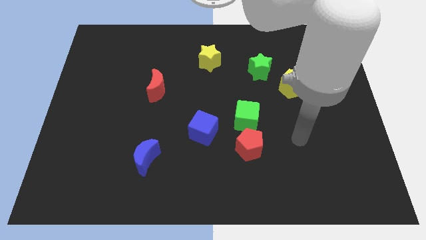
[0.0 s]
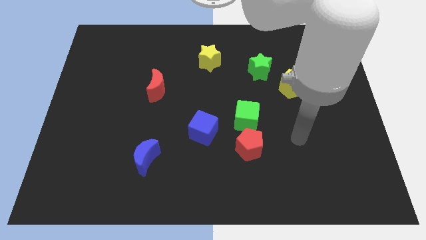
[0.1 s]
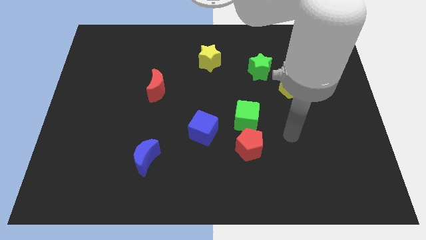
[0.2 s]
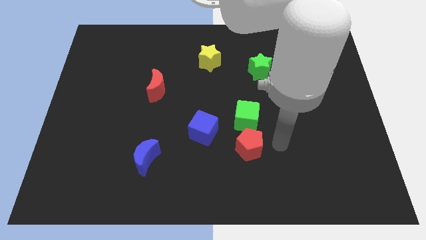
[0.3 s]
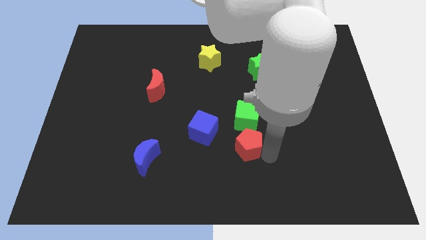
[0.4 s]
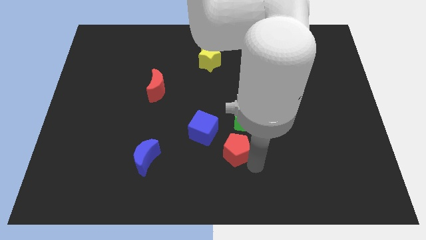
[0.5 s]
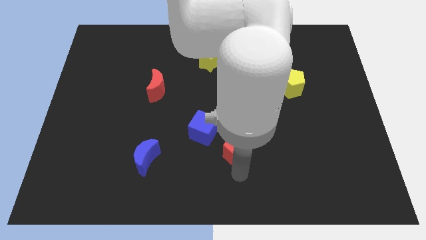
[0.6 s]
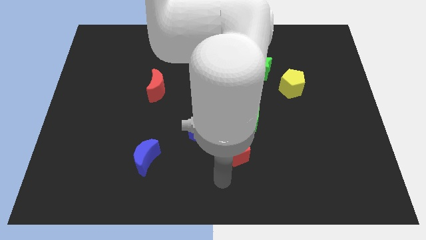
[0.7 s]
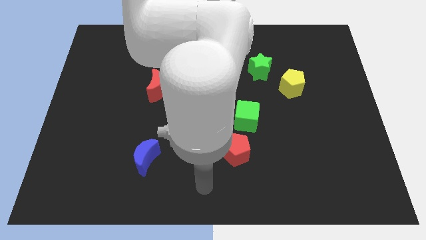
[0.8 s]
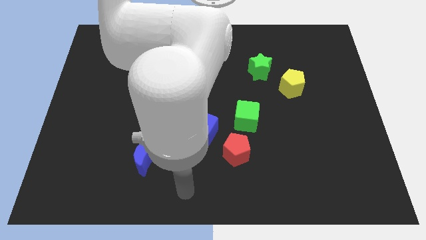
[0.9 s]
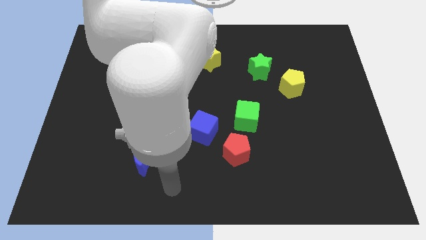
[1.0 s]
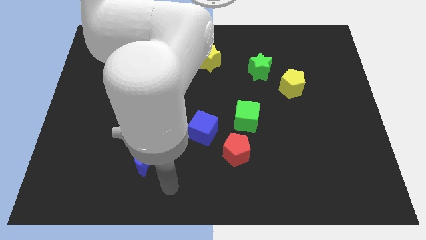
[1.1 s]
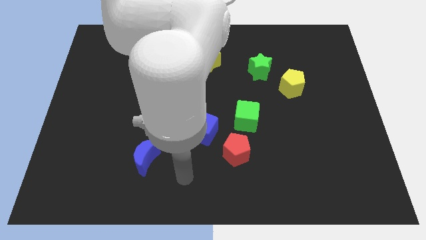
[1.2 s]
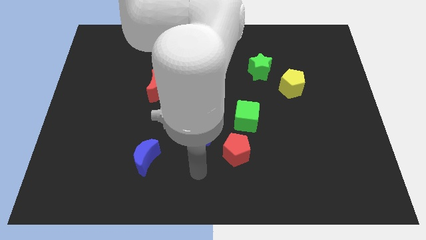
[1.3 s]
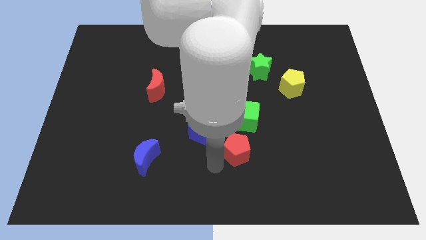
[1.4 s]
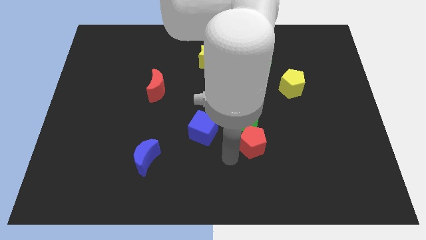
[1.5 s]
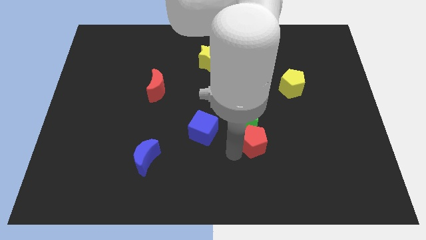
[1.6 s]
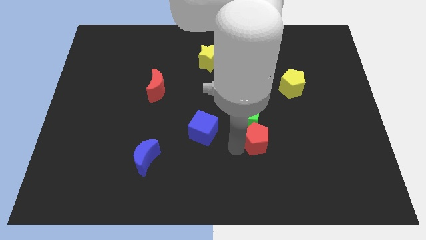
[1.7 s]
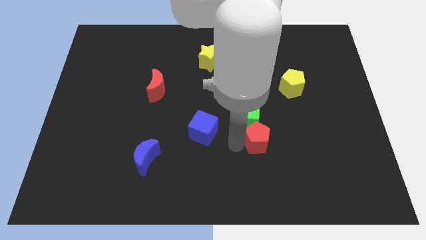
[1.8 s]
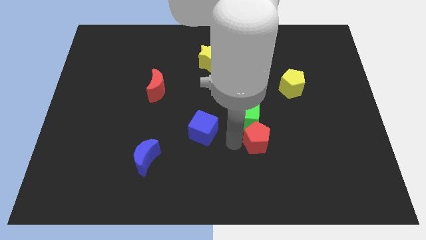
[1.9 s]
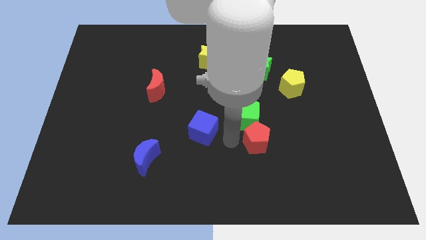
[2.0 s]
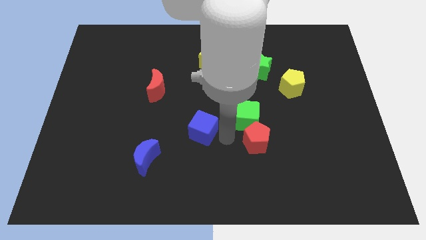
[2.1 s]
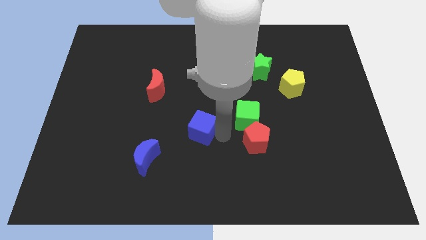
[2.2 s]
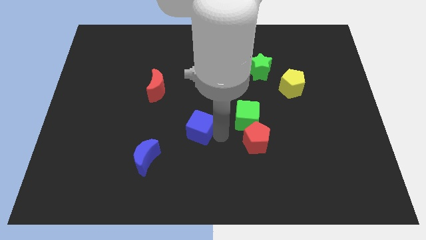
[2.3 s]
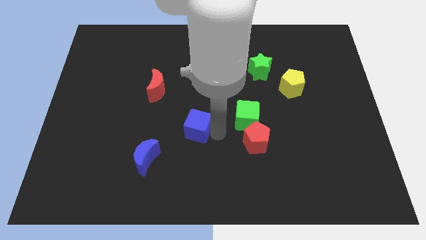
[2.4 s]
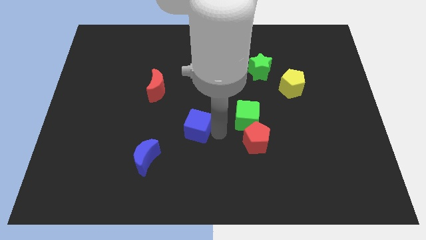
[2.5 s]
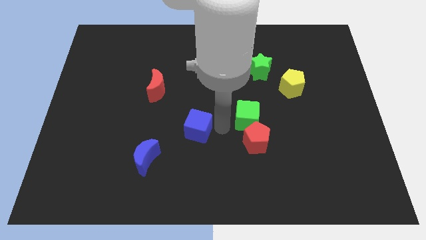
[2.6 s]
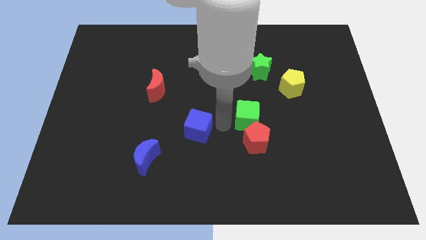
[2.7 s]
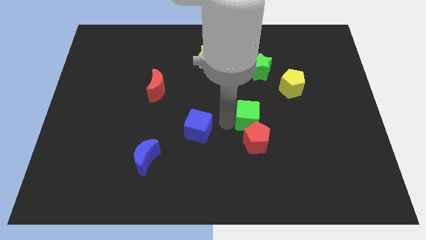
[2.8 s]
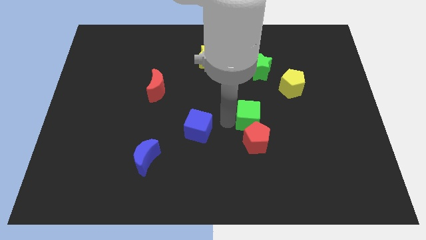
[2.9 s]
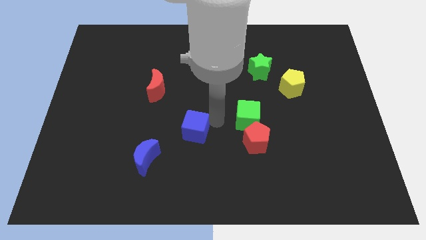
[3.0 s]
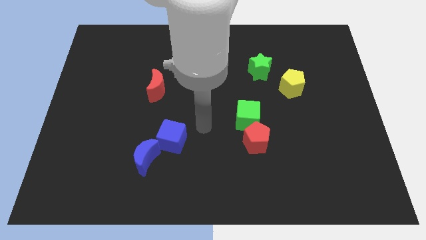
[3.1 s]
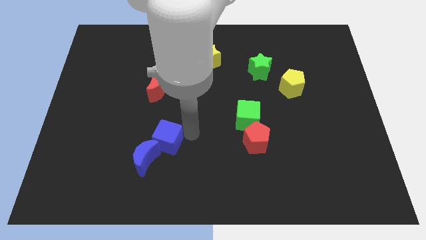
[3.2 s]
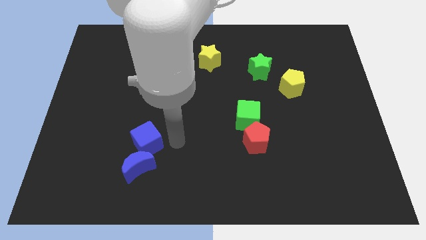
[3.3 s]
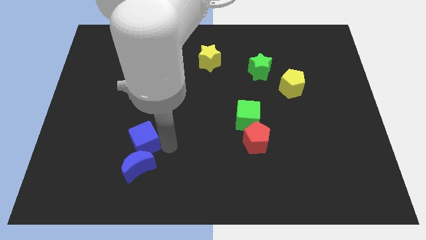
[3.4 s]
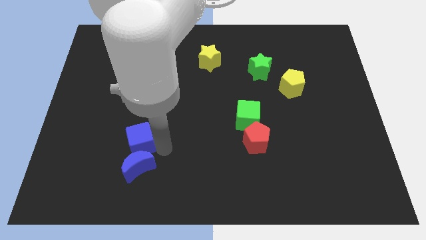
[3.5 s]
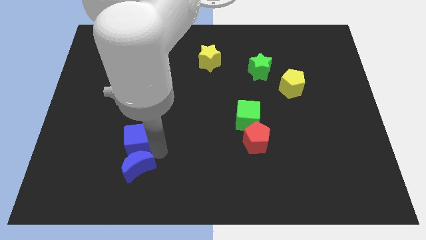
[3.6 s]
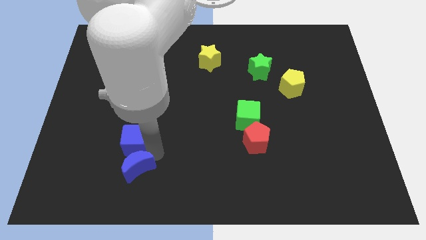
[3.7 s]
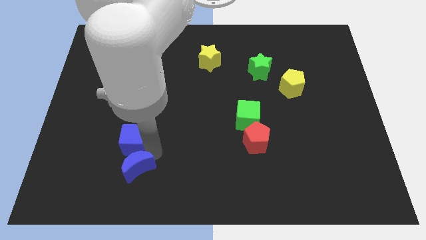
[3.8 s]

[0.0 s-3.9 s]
place blue blocks together at the bottom of the board

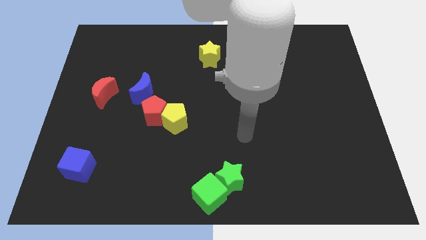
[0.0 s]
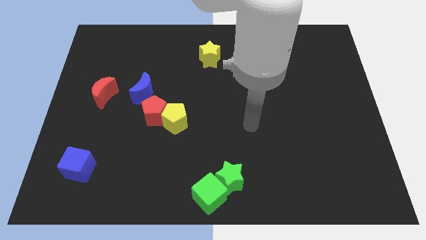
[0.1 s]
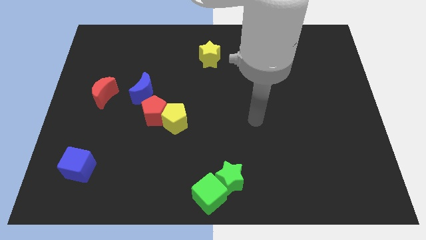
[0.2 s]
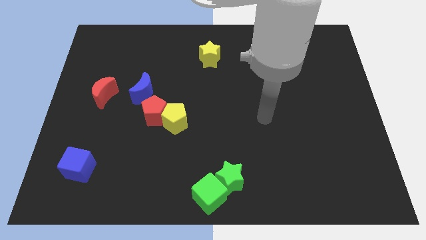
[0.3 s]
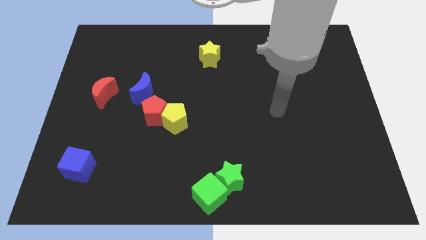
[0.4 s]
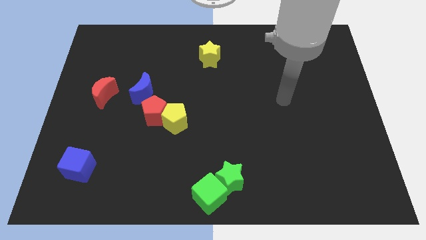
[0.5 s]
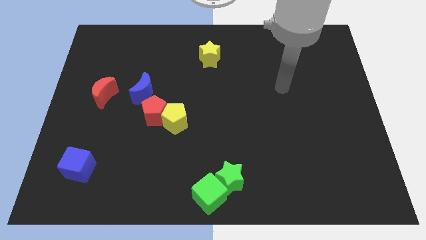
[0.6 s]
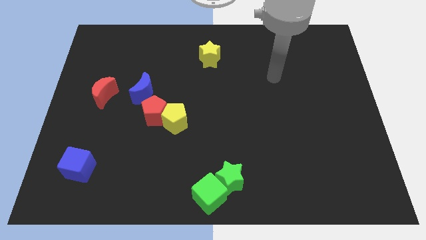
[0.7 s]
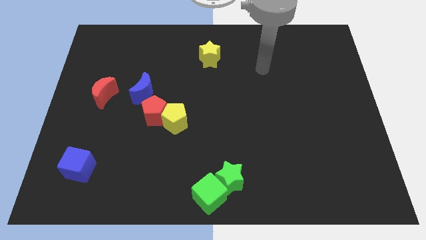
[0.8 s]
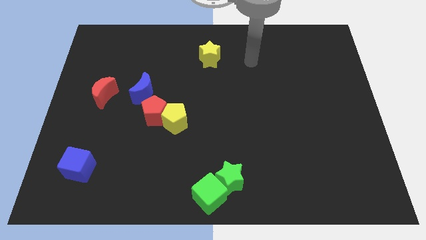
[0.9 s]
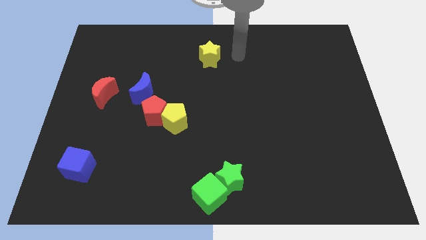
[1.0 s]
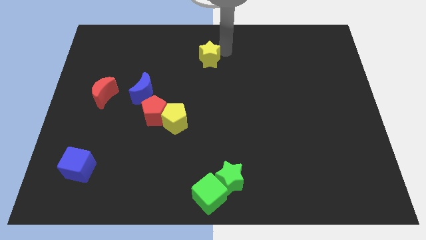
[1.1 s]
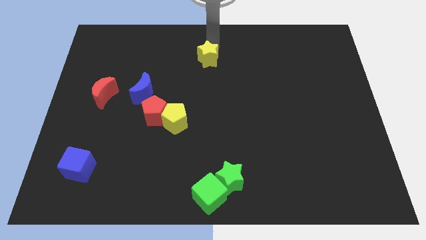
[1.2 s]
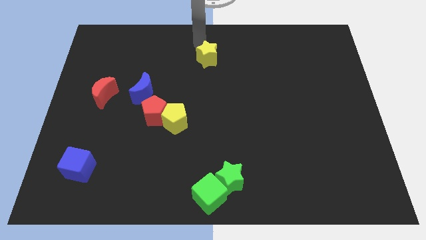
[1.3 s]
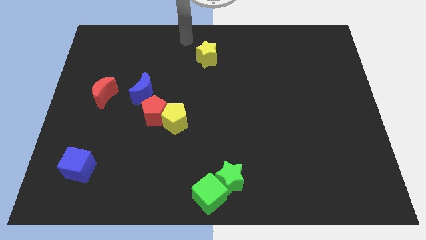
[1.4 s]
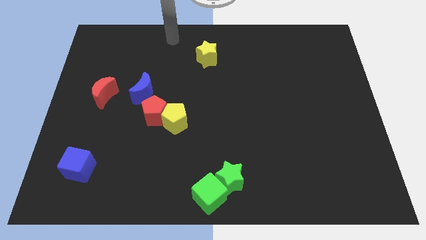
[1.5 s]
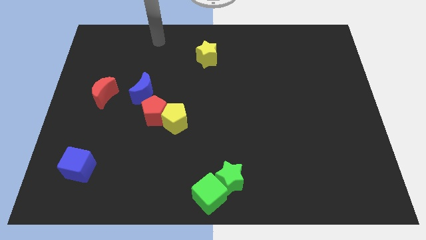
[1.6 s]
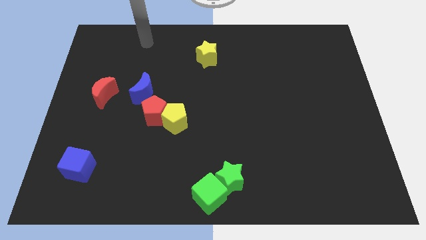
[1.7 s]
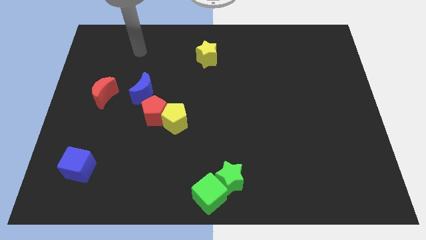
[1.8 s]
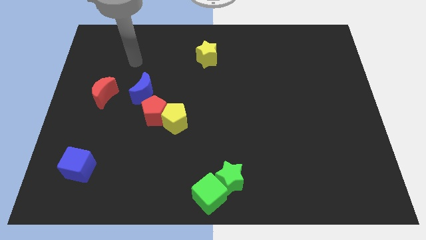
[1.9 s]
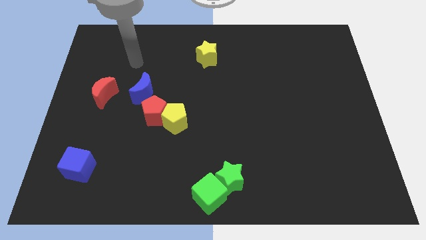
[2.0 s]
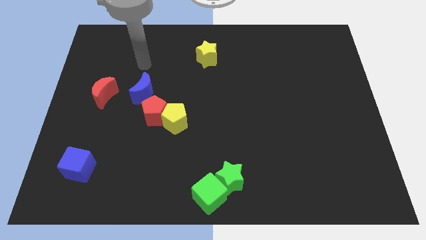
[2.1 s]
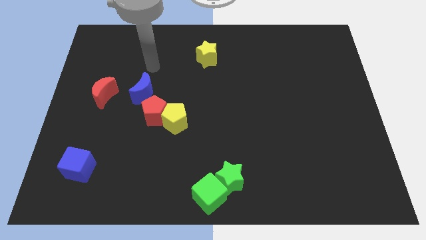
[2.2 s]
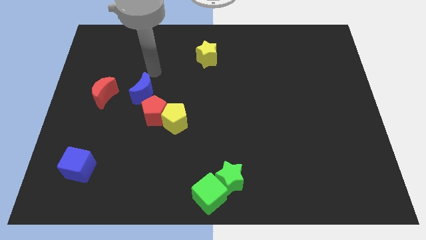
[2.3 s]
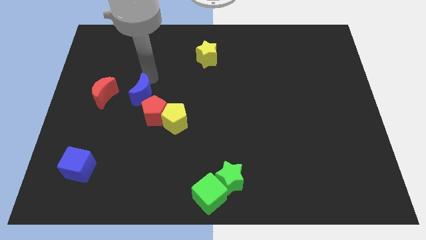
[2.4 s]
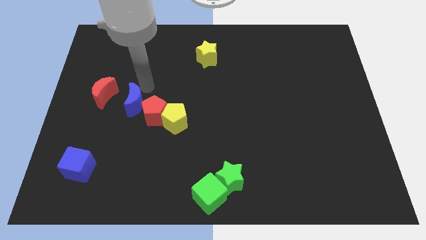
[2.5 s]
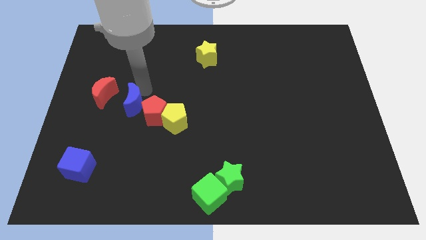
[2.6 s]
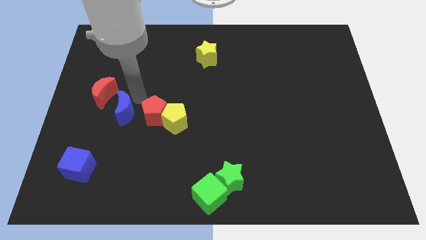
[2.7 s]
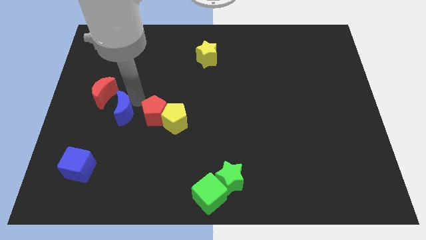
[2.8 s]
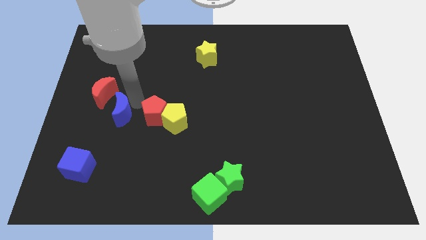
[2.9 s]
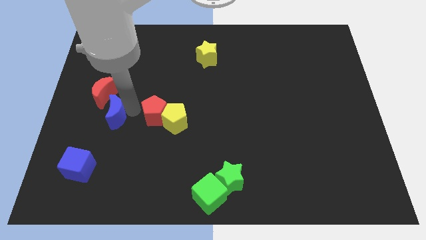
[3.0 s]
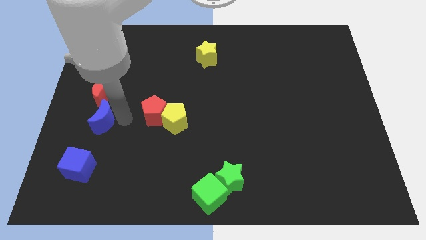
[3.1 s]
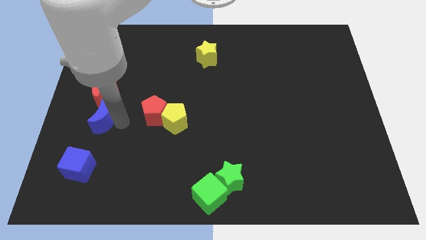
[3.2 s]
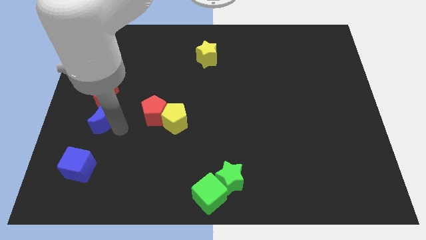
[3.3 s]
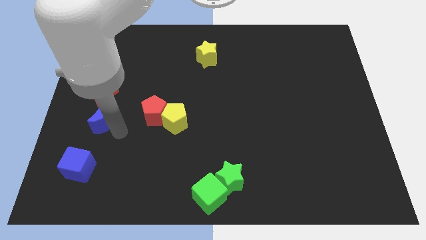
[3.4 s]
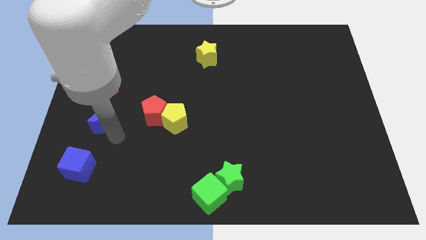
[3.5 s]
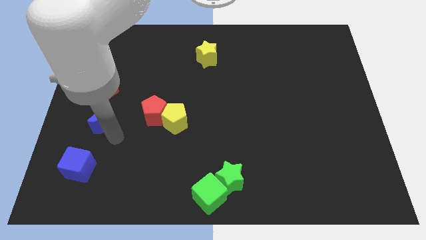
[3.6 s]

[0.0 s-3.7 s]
drag the blue crescent towards the blue cube

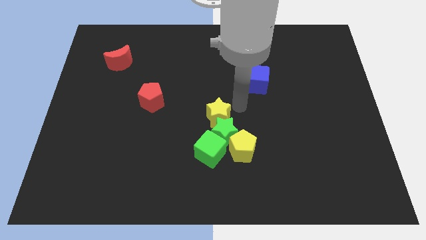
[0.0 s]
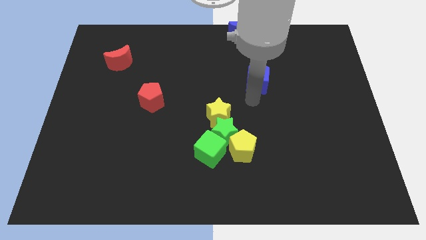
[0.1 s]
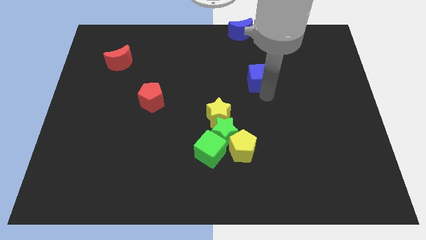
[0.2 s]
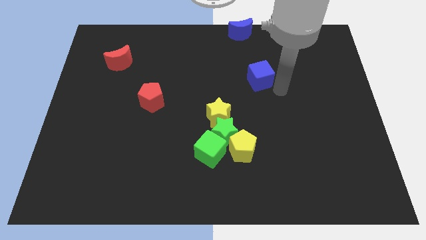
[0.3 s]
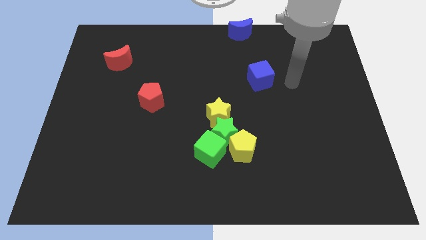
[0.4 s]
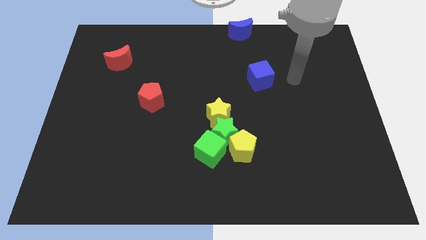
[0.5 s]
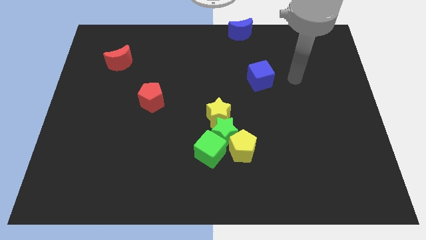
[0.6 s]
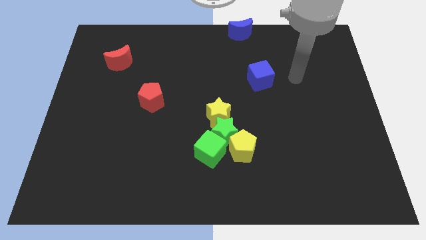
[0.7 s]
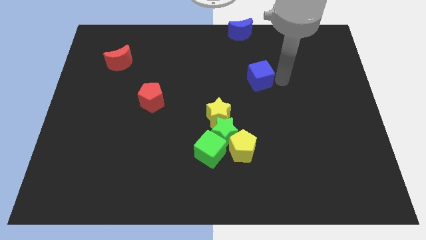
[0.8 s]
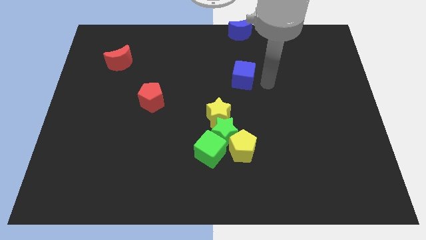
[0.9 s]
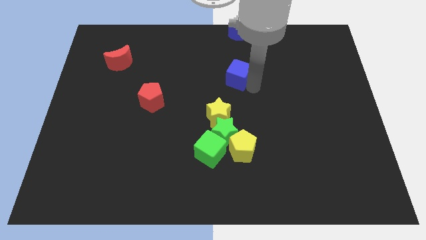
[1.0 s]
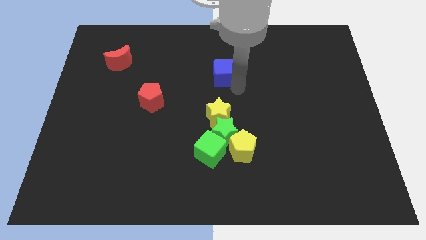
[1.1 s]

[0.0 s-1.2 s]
put the blue cube vertically above the yellow star

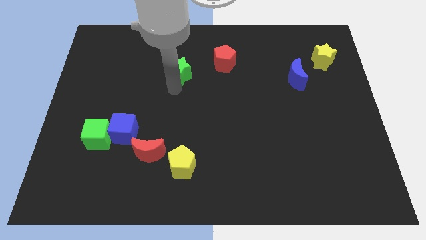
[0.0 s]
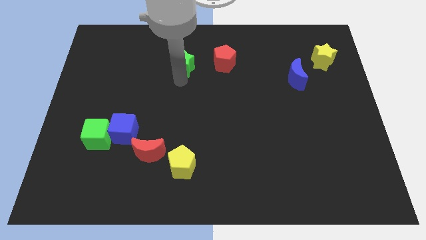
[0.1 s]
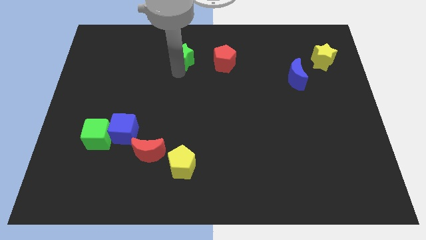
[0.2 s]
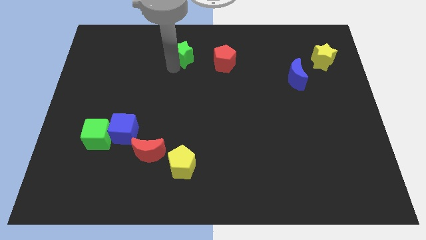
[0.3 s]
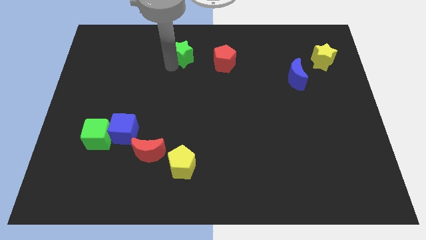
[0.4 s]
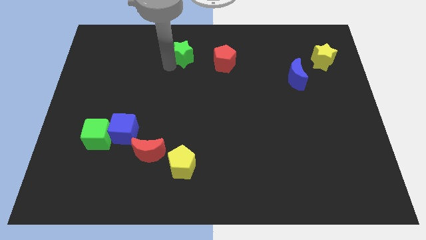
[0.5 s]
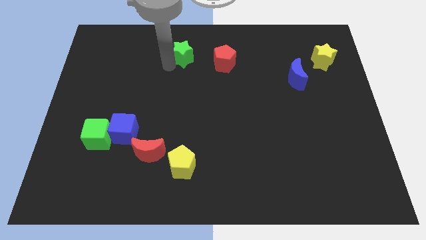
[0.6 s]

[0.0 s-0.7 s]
push the green star towards the top side of the board
